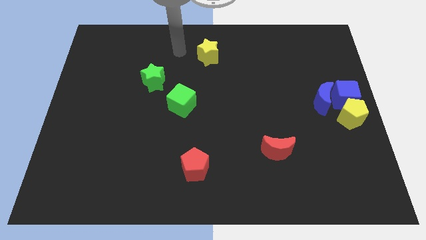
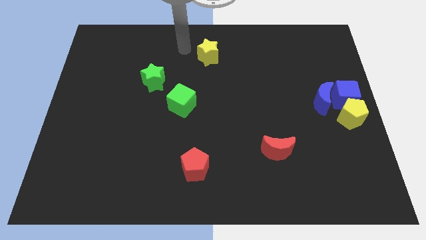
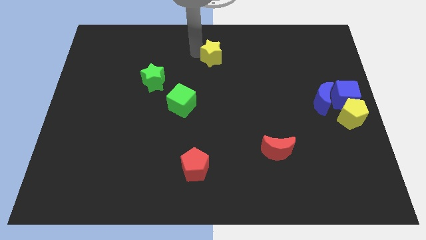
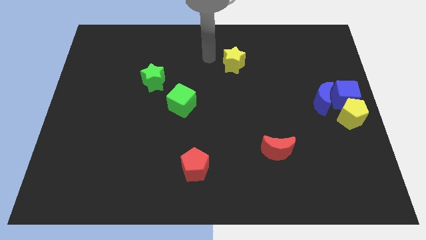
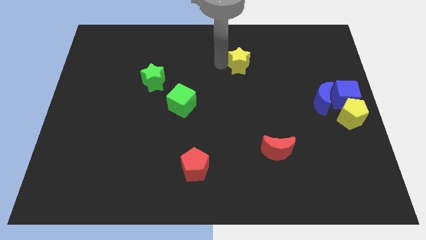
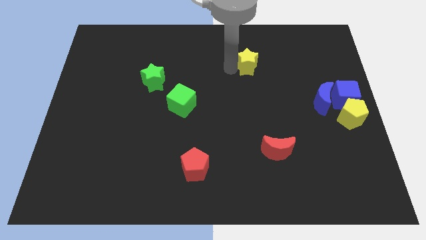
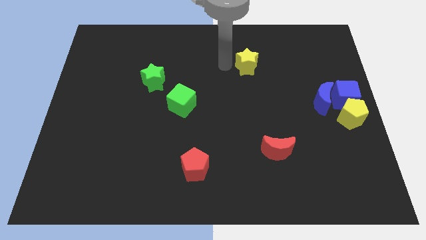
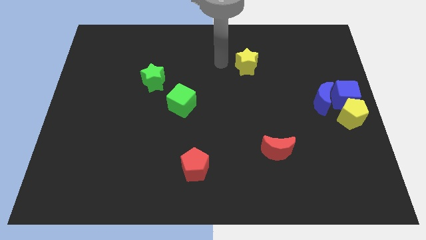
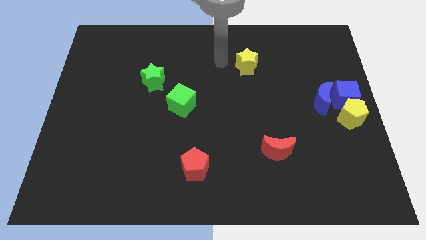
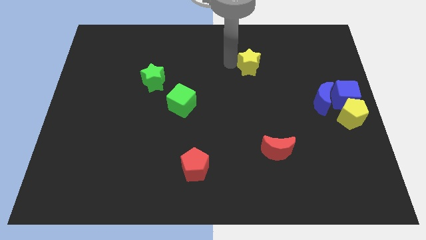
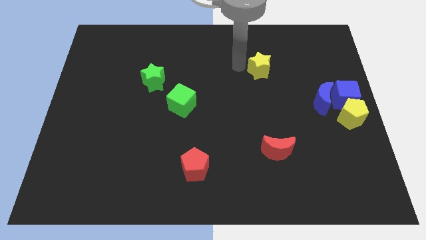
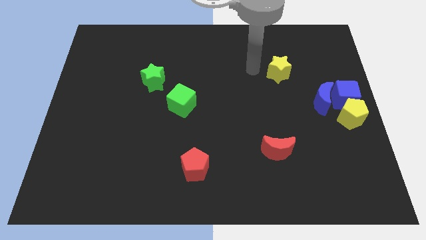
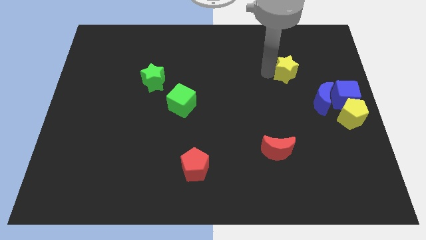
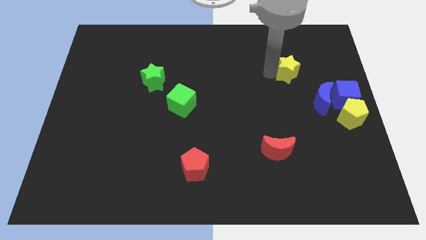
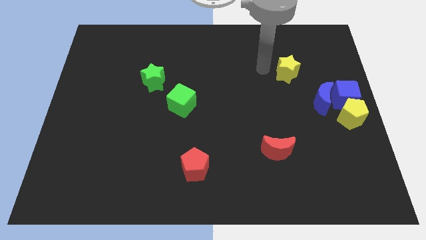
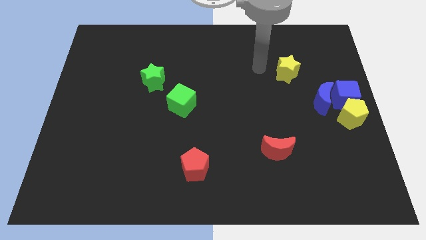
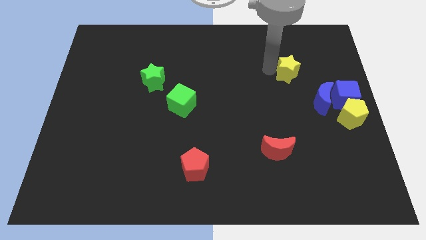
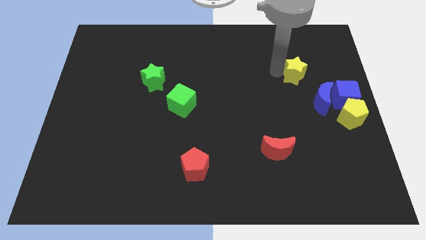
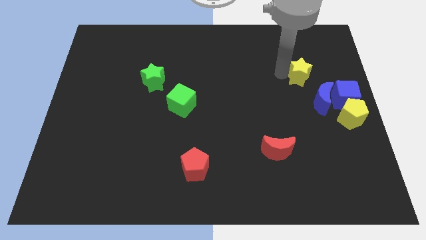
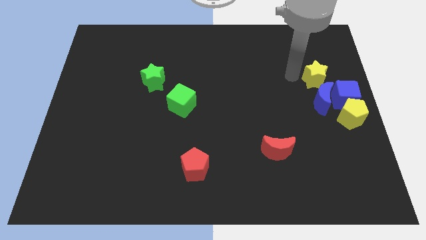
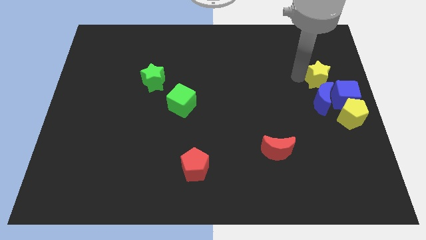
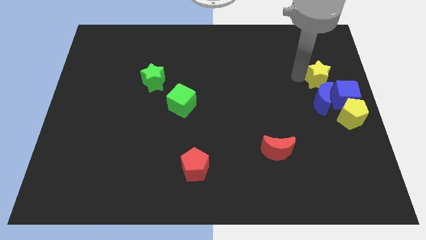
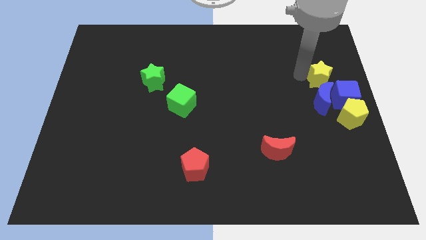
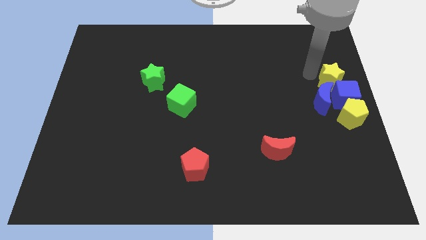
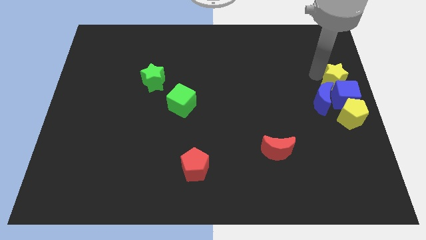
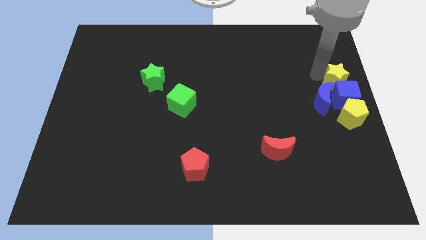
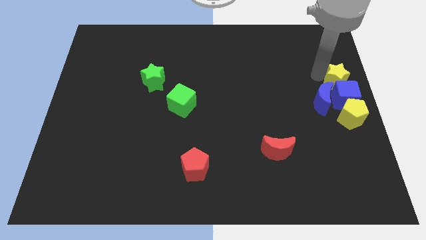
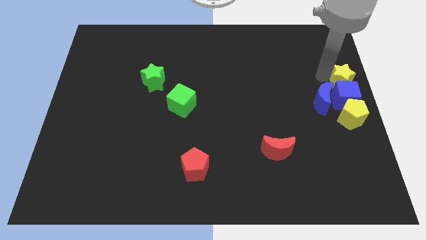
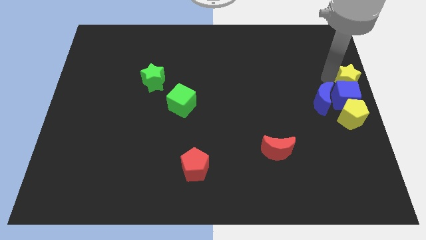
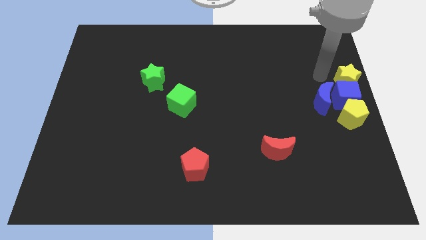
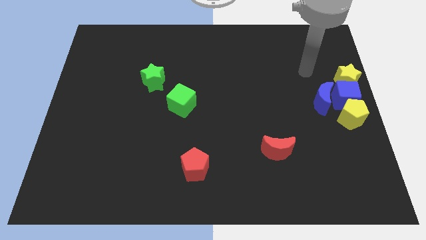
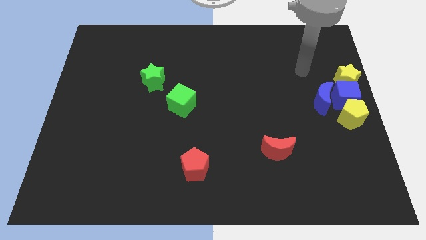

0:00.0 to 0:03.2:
put the yellow star at the top of the blue cube

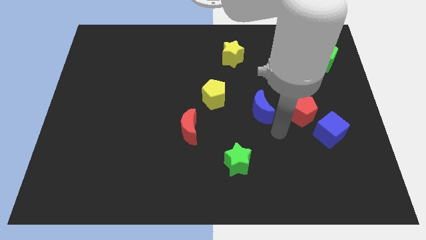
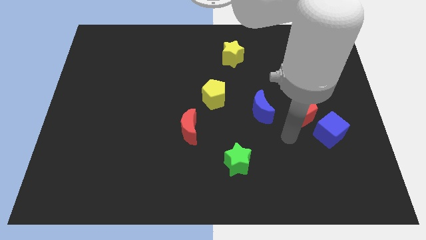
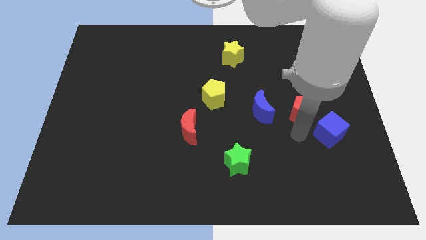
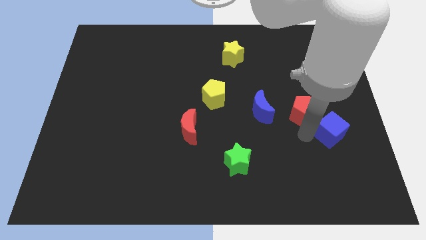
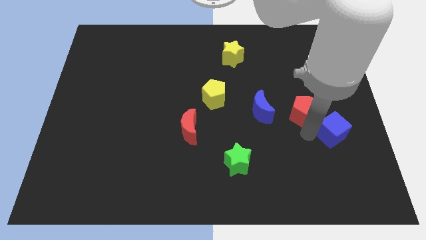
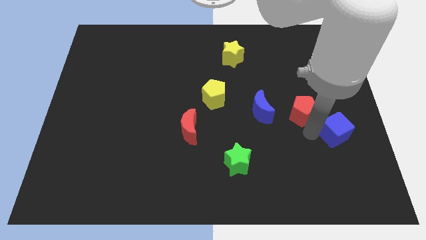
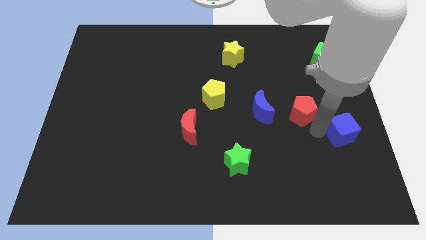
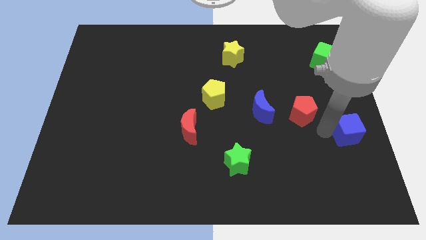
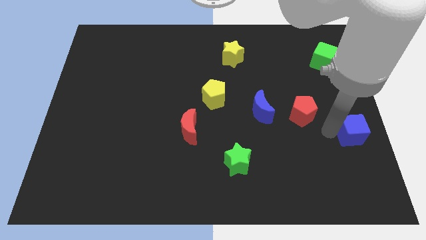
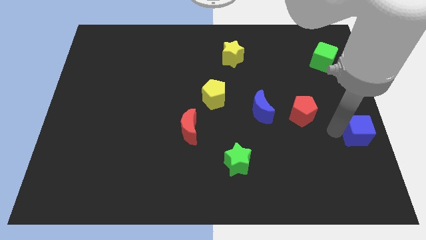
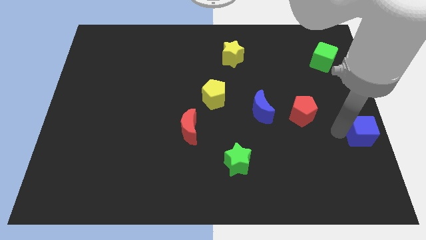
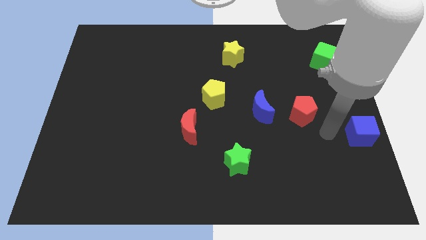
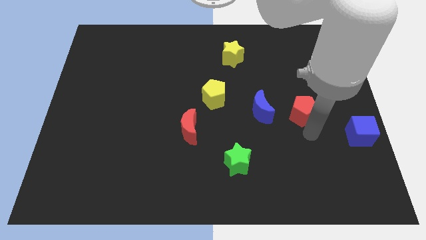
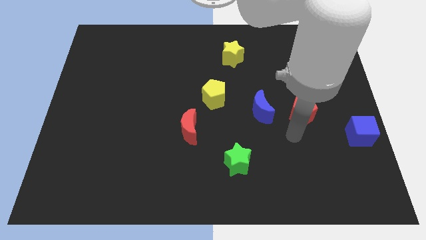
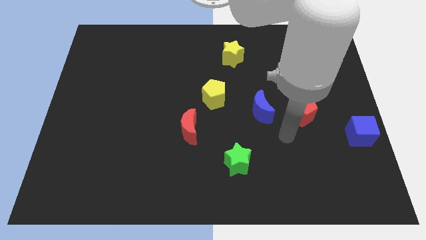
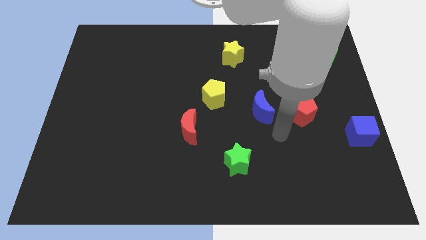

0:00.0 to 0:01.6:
separate the blue cube from the red pentagon to the right side of the board

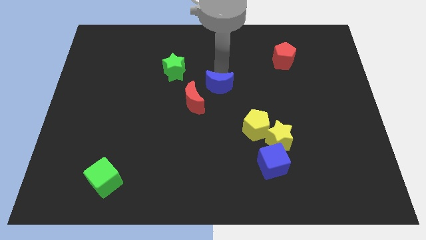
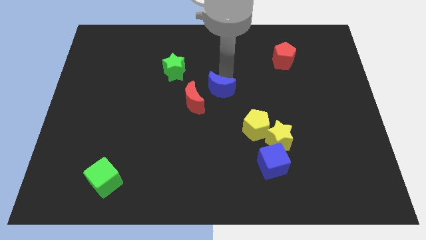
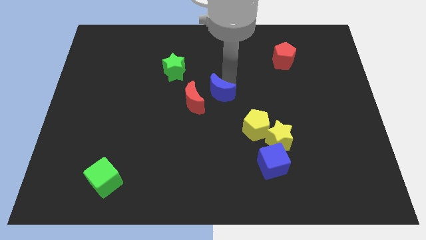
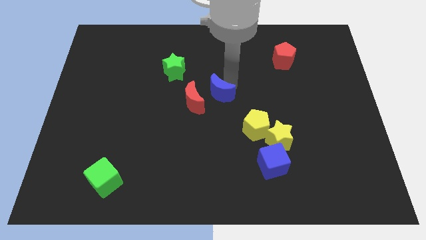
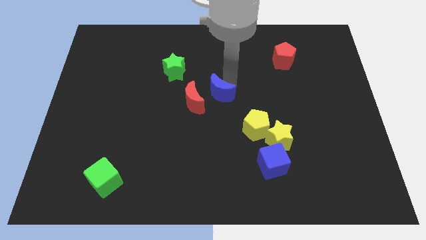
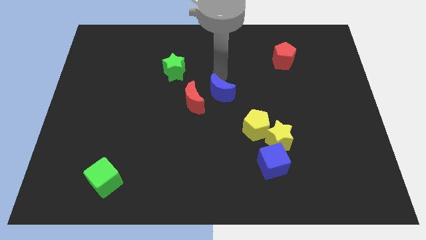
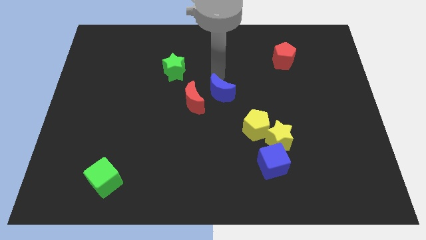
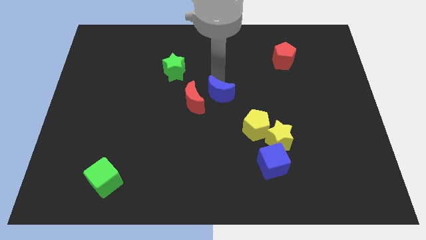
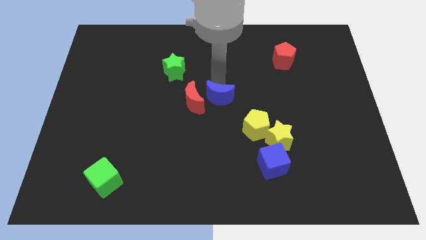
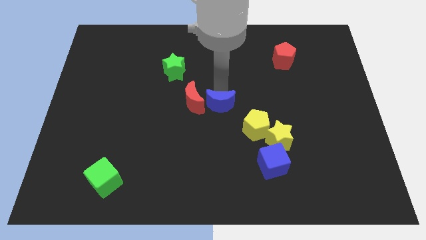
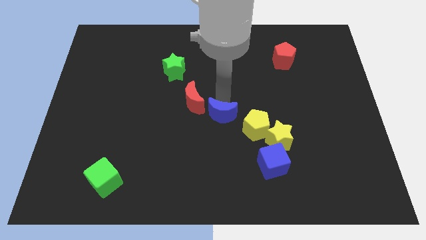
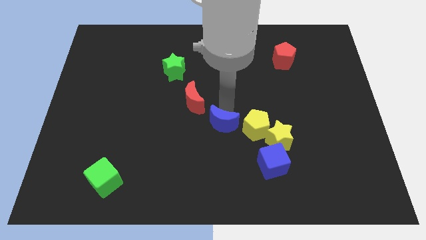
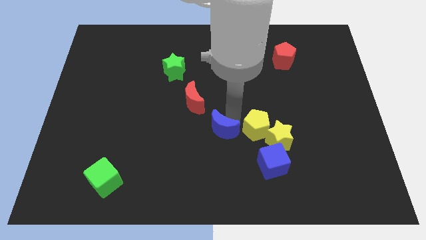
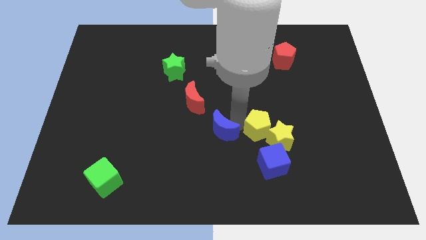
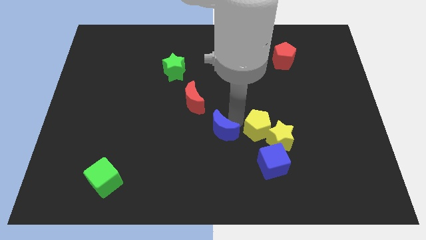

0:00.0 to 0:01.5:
move the blue crescent to the left of the yellow pentagon

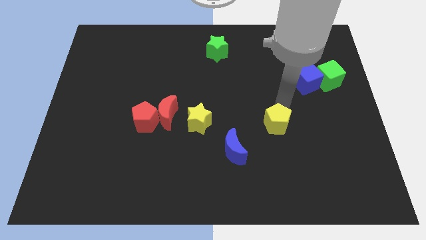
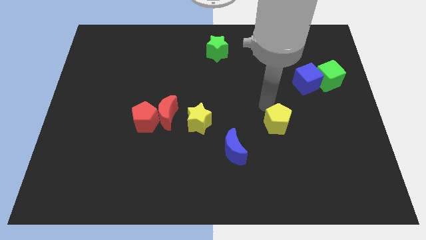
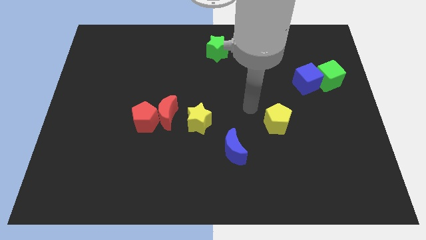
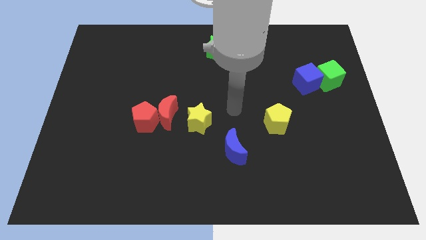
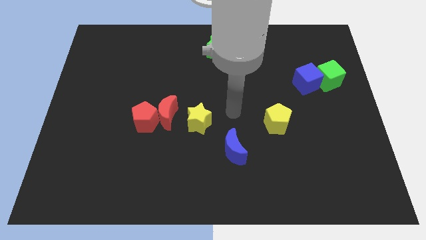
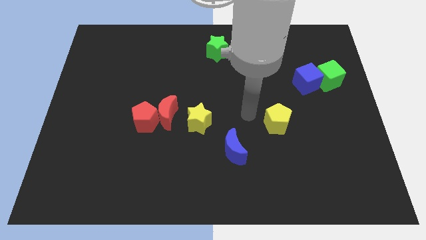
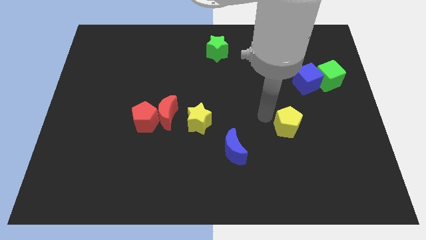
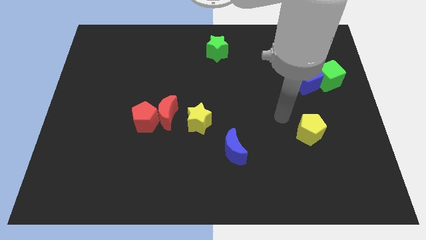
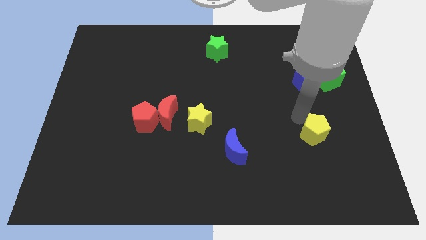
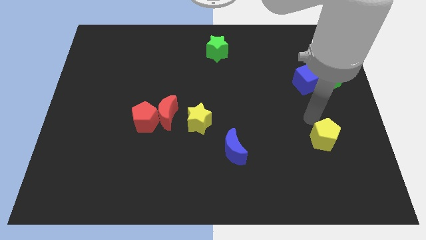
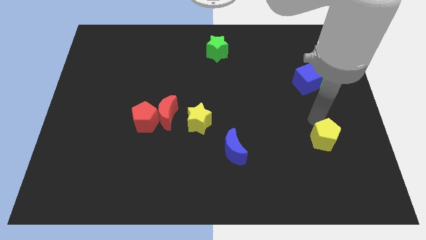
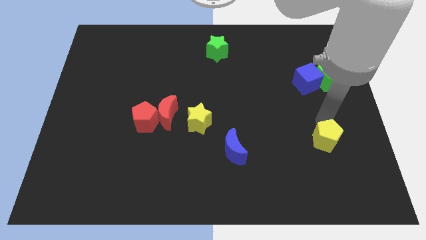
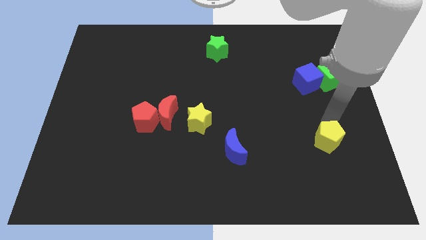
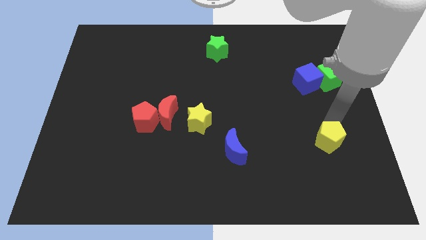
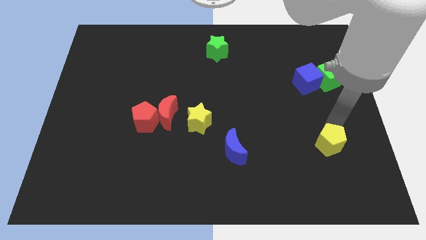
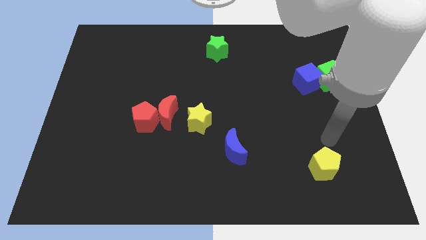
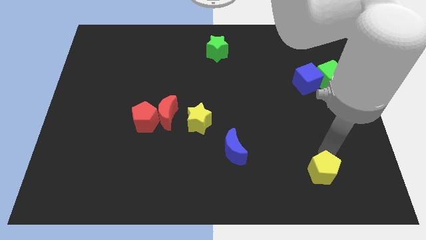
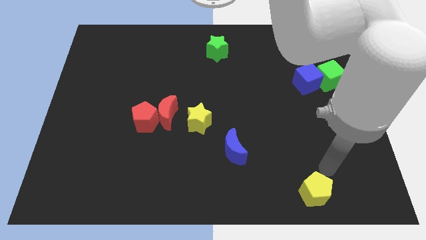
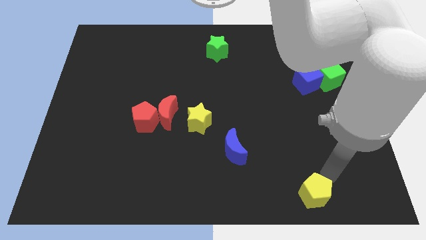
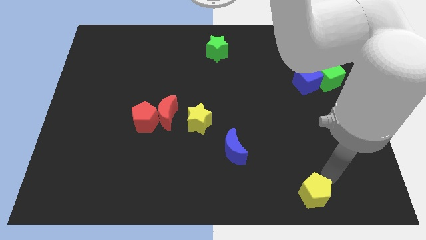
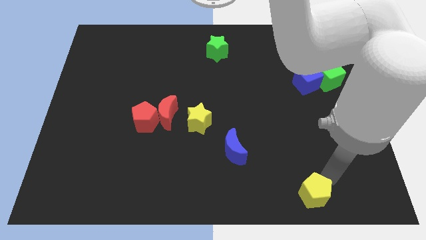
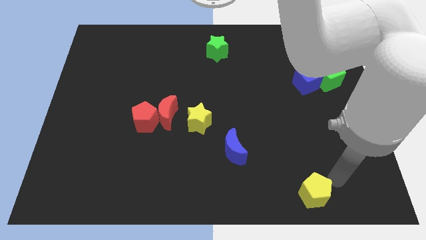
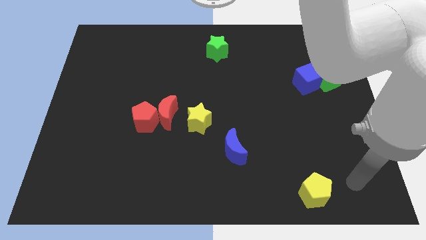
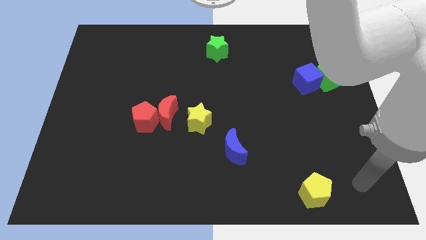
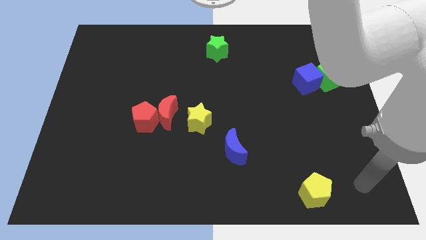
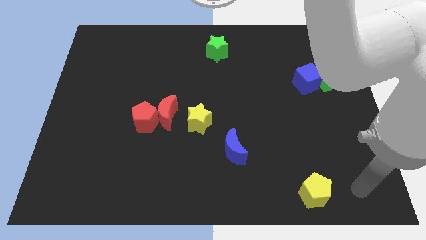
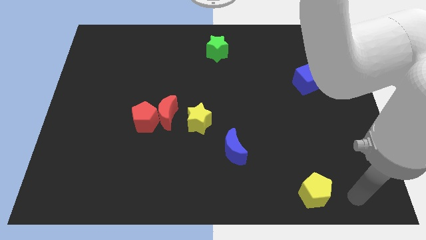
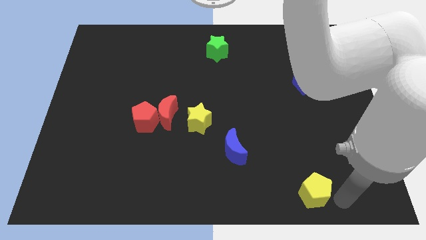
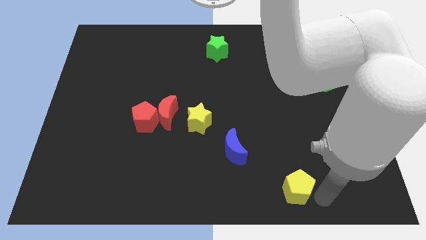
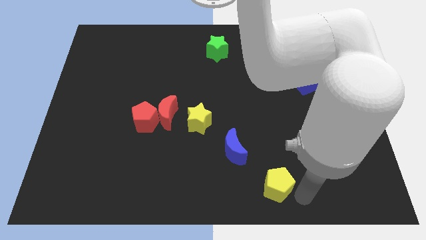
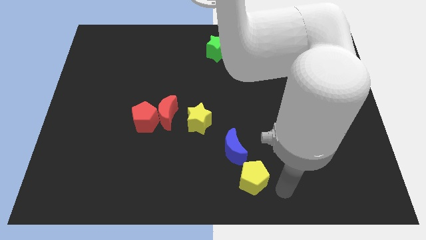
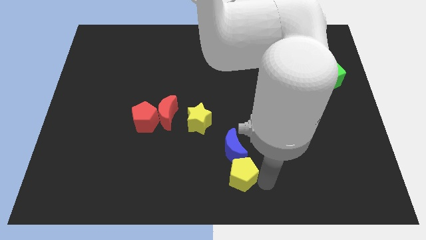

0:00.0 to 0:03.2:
place the yellow pentagon below the blue crescent
